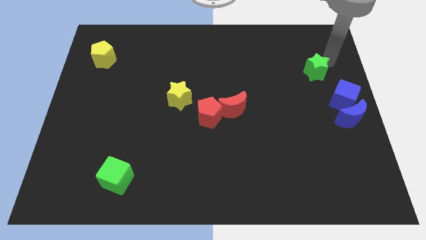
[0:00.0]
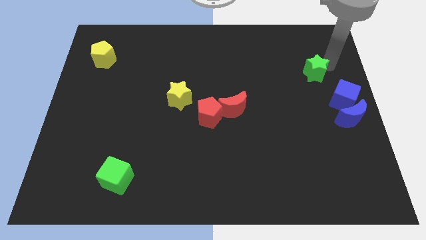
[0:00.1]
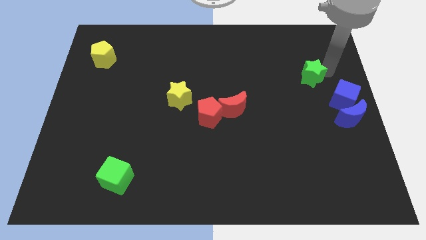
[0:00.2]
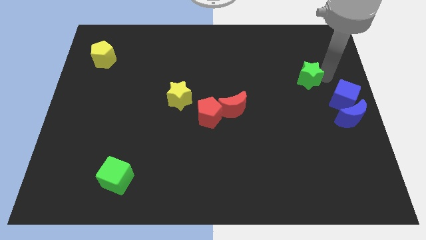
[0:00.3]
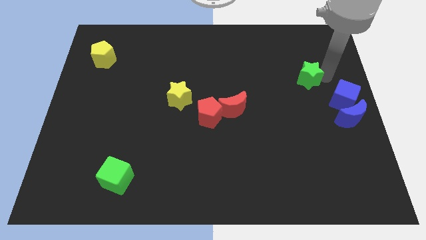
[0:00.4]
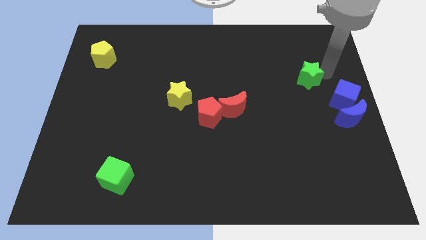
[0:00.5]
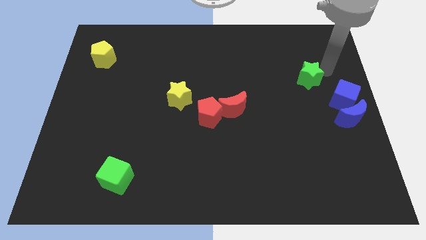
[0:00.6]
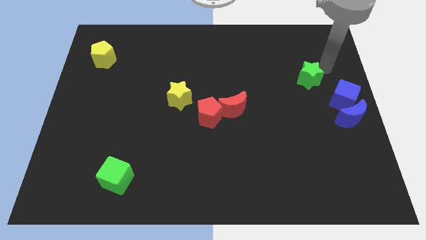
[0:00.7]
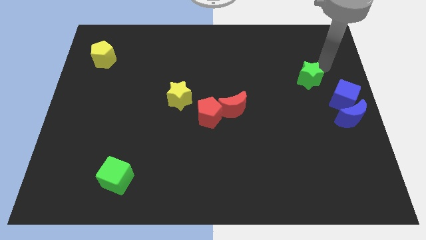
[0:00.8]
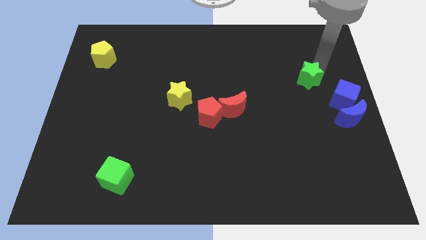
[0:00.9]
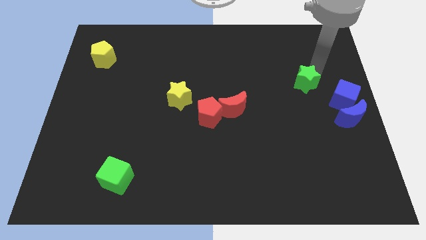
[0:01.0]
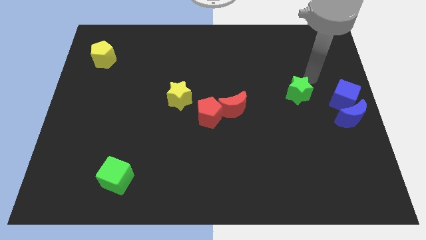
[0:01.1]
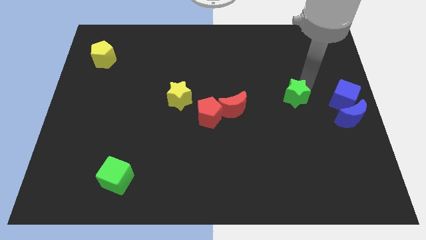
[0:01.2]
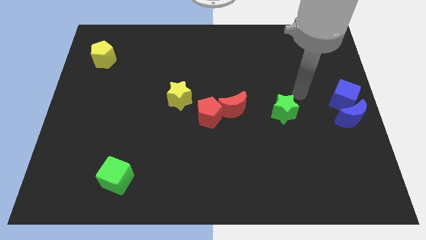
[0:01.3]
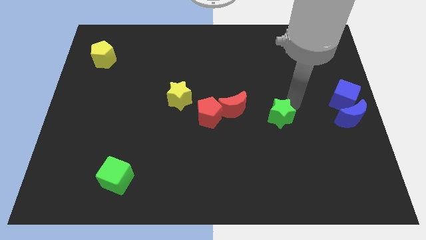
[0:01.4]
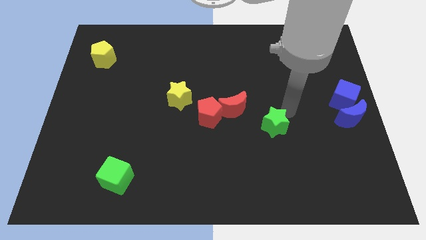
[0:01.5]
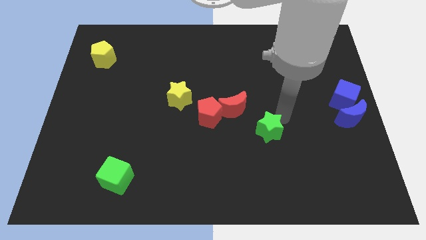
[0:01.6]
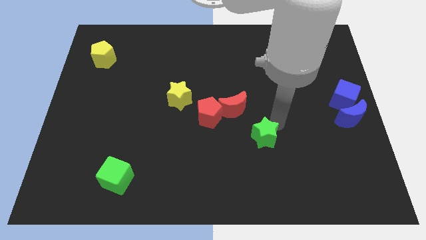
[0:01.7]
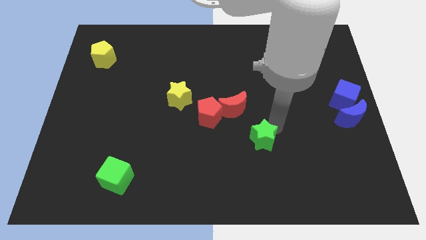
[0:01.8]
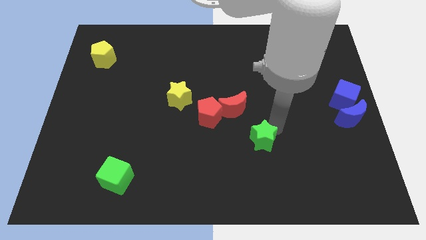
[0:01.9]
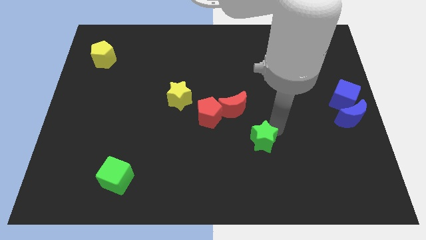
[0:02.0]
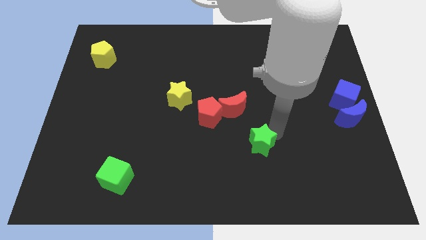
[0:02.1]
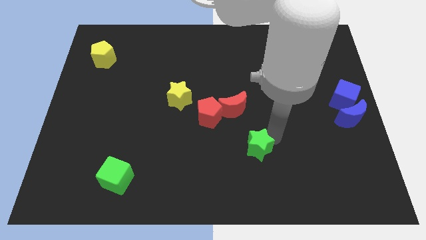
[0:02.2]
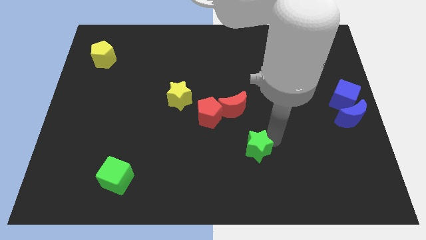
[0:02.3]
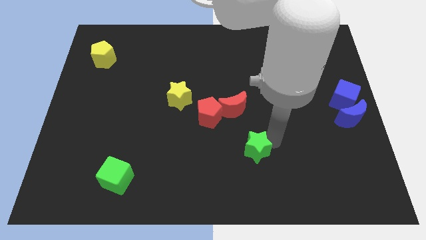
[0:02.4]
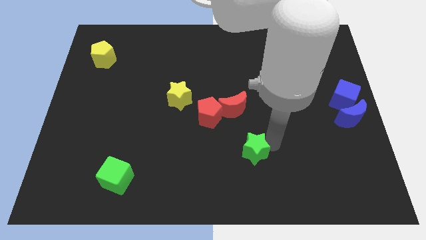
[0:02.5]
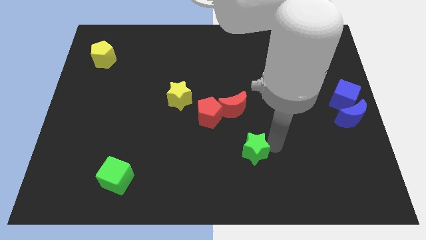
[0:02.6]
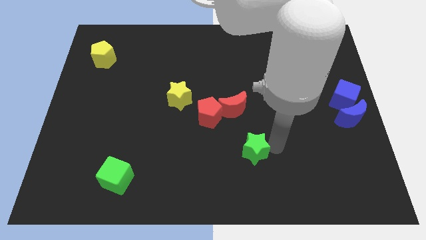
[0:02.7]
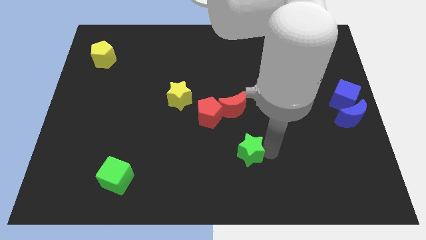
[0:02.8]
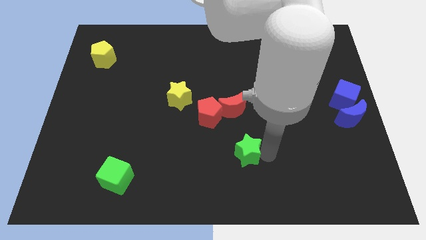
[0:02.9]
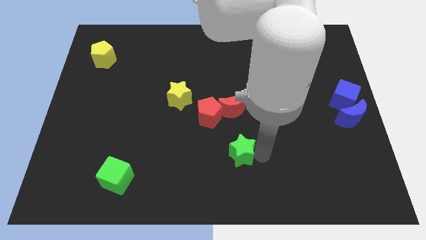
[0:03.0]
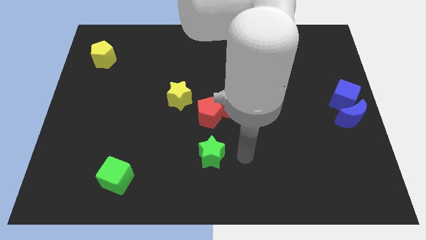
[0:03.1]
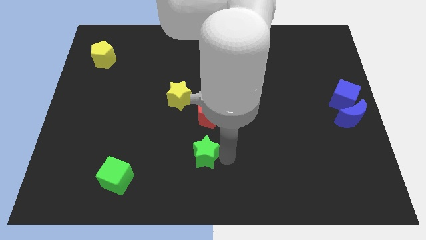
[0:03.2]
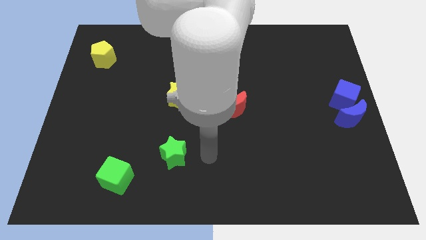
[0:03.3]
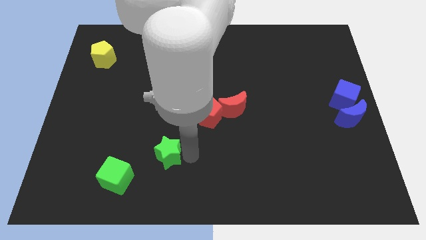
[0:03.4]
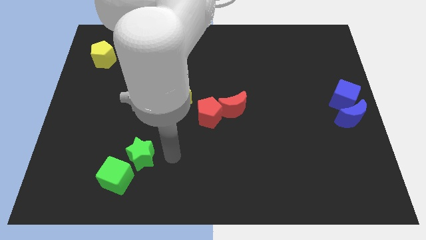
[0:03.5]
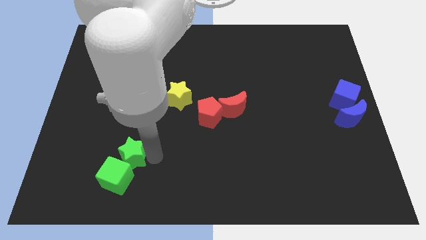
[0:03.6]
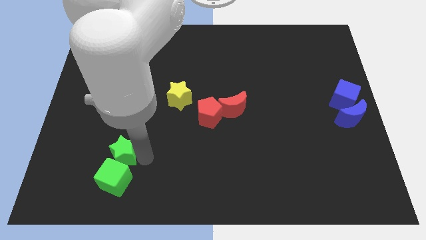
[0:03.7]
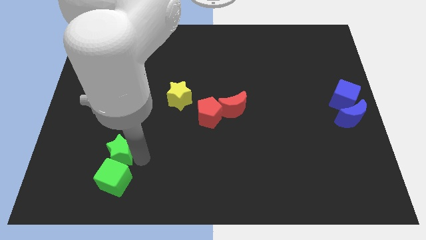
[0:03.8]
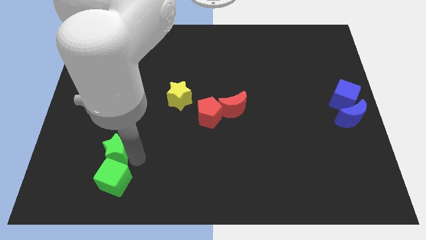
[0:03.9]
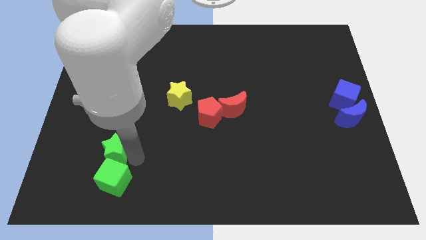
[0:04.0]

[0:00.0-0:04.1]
push the green star into the green cube

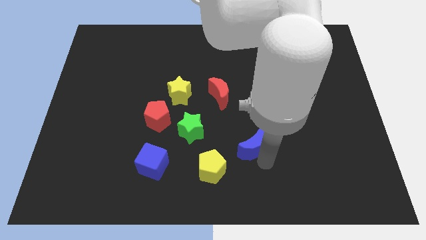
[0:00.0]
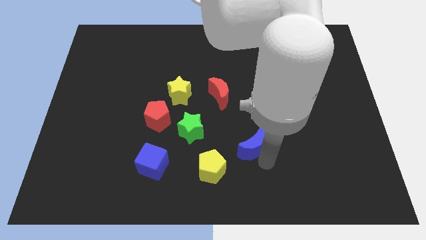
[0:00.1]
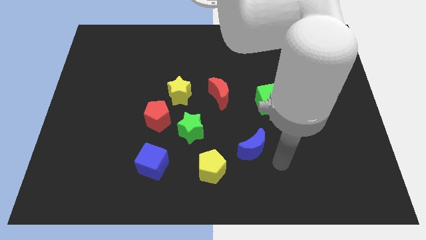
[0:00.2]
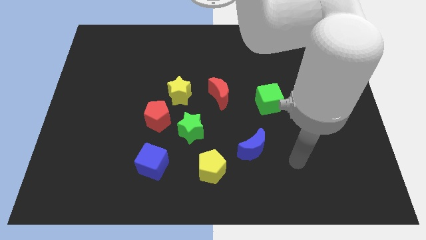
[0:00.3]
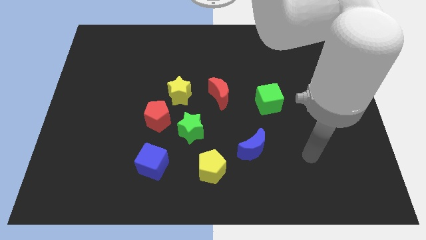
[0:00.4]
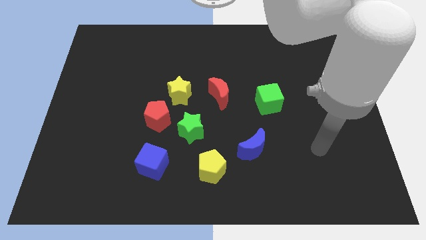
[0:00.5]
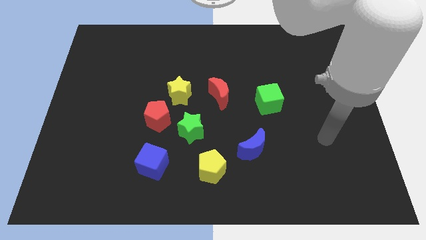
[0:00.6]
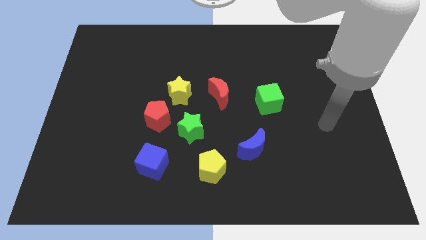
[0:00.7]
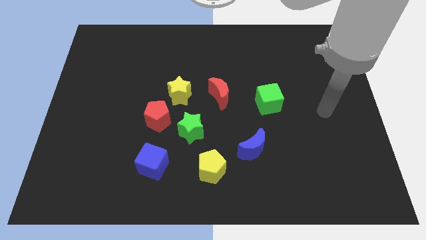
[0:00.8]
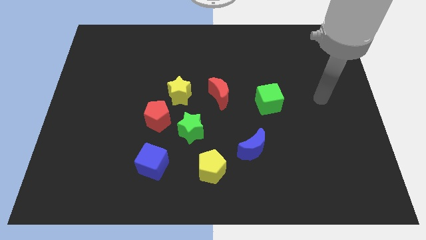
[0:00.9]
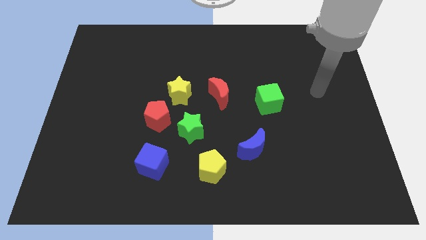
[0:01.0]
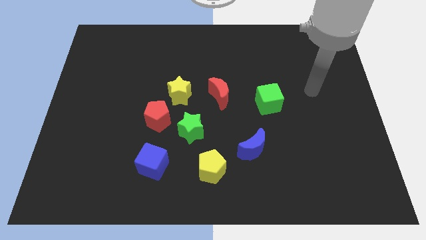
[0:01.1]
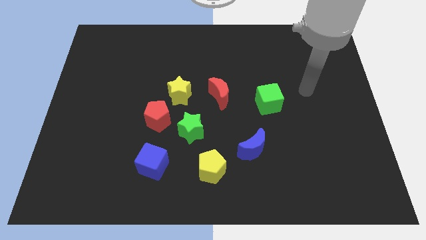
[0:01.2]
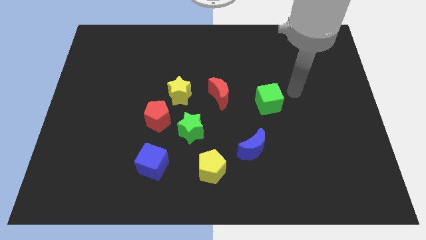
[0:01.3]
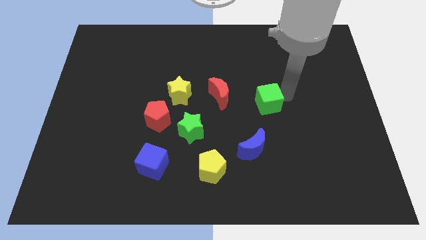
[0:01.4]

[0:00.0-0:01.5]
go and point your hand at the right side of the green cube

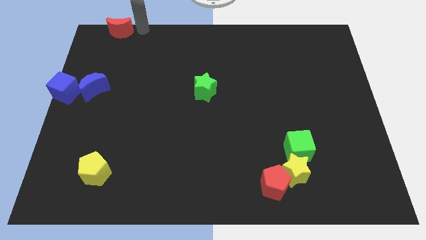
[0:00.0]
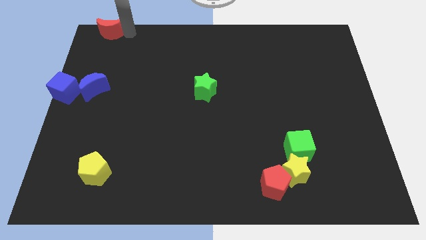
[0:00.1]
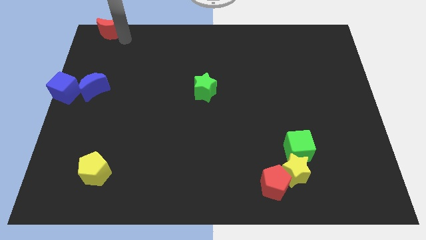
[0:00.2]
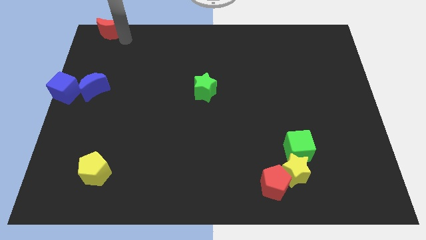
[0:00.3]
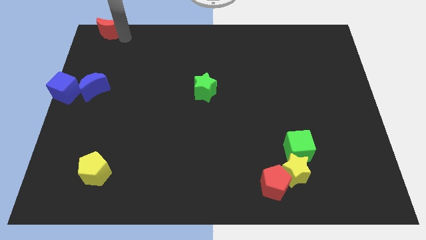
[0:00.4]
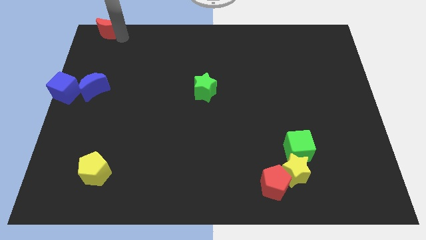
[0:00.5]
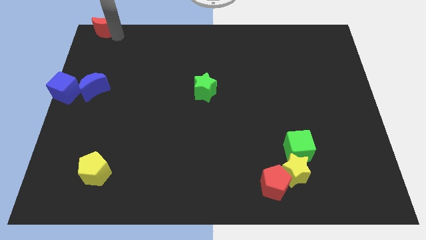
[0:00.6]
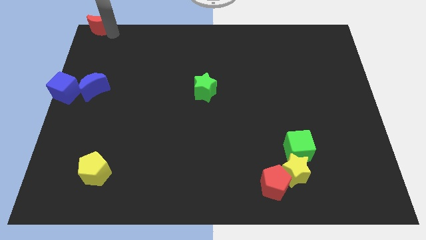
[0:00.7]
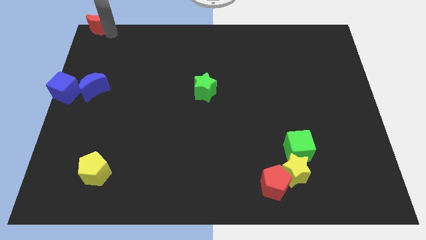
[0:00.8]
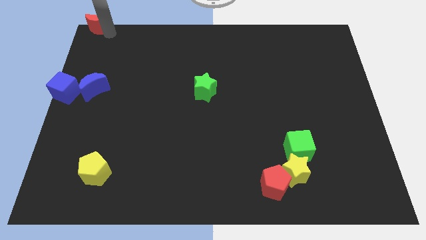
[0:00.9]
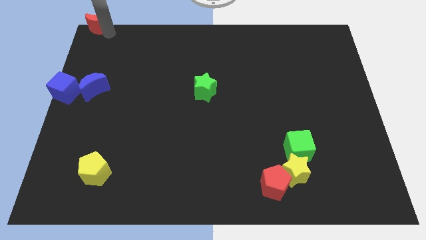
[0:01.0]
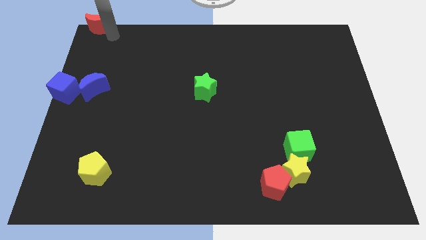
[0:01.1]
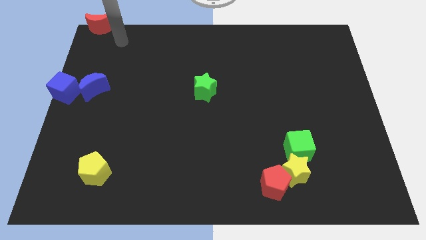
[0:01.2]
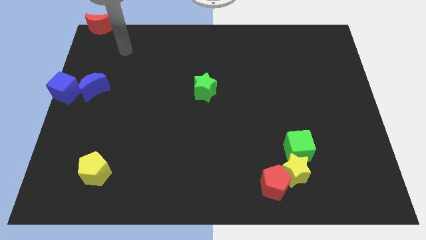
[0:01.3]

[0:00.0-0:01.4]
move red moon to top left corner

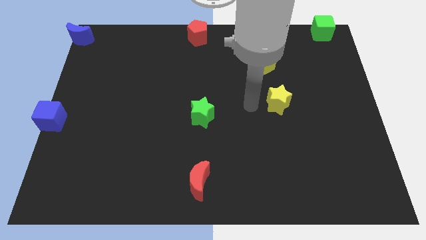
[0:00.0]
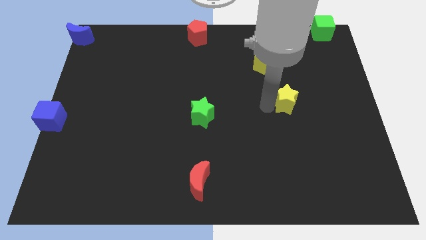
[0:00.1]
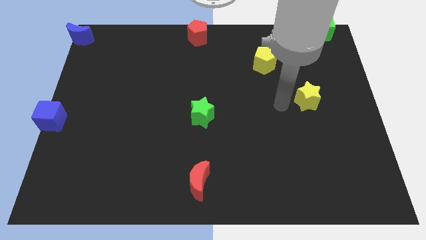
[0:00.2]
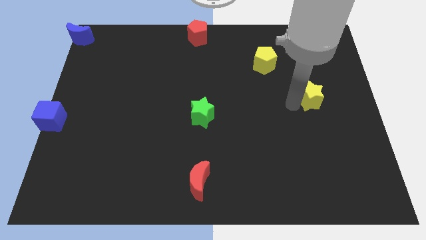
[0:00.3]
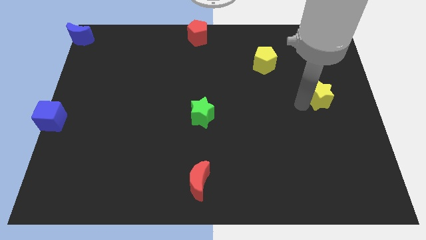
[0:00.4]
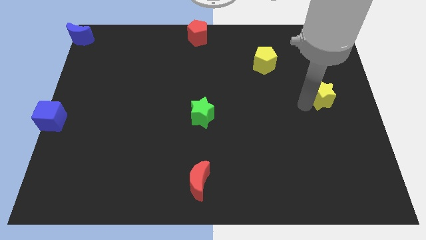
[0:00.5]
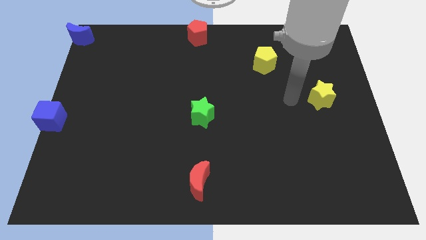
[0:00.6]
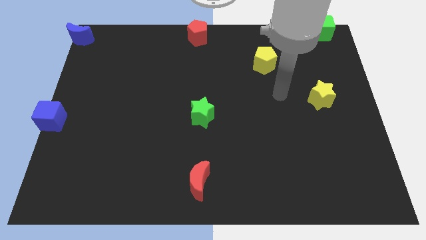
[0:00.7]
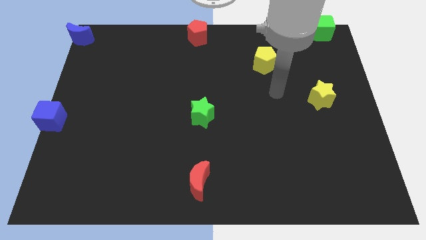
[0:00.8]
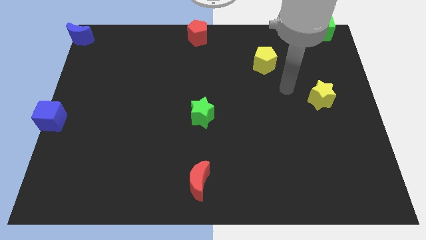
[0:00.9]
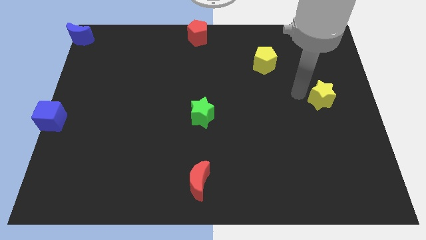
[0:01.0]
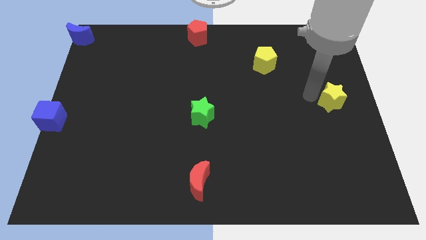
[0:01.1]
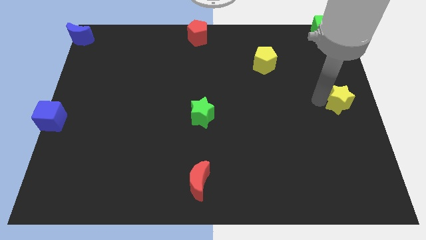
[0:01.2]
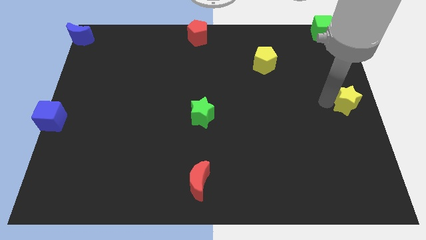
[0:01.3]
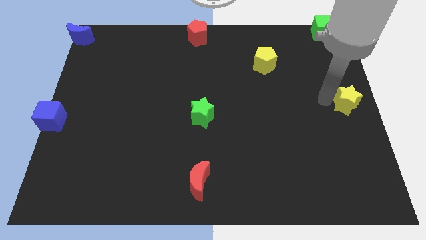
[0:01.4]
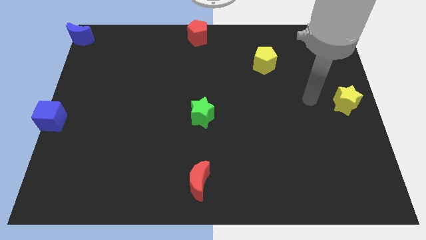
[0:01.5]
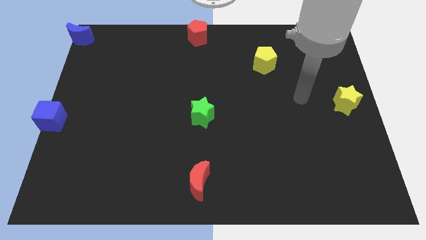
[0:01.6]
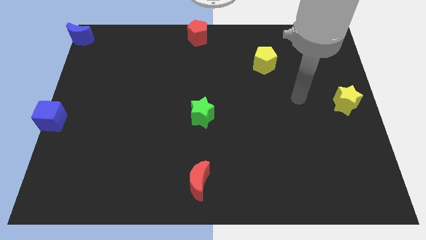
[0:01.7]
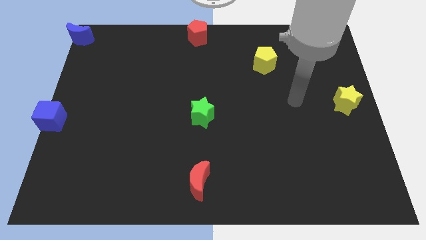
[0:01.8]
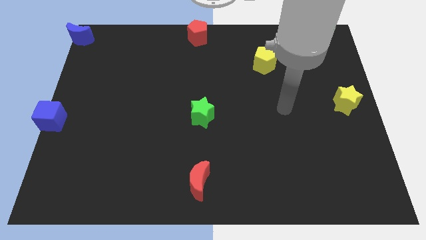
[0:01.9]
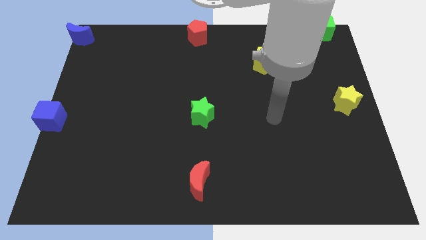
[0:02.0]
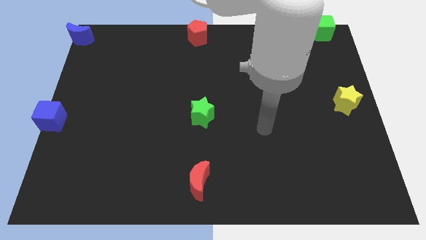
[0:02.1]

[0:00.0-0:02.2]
push the yellow star to the center right of the board
